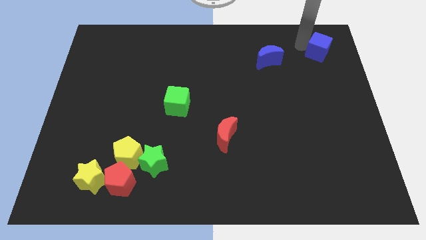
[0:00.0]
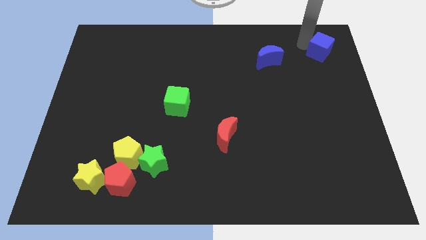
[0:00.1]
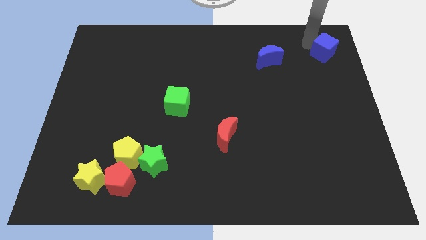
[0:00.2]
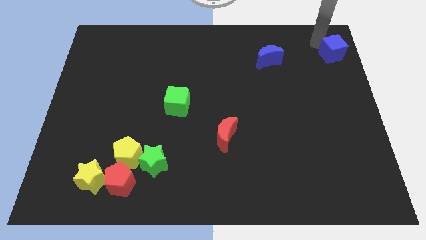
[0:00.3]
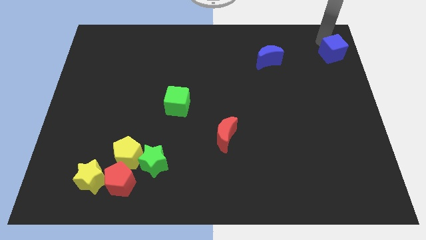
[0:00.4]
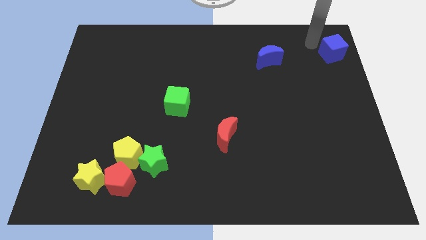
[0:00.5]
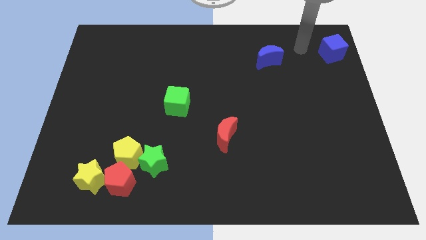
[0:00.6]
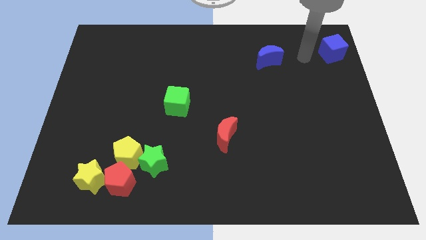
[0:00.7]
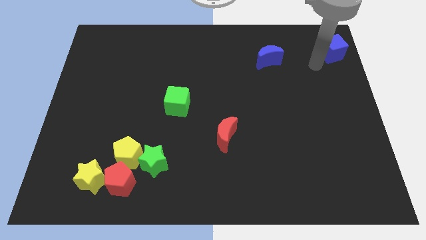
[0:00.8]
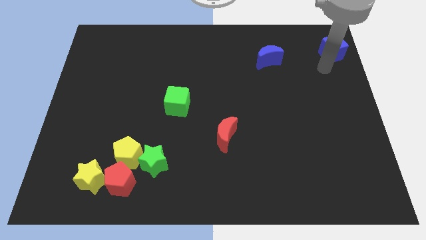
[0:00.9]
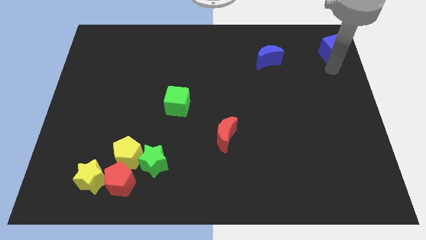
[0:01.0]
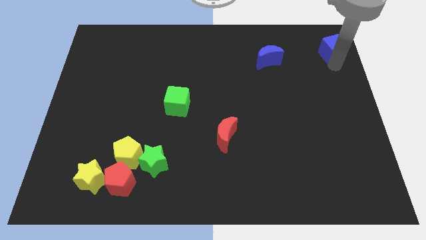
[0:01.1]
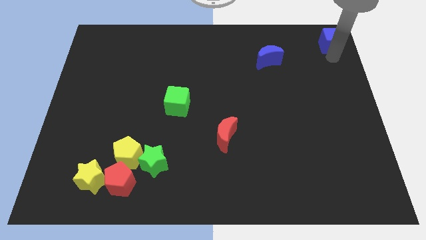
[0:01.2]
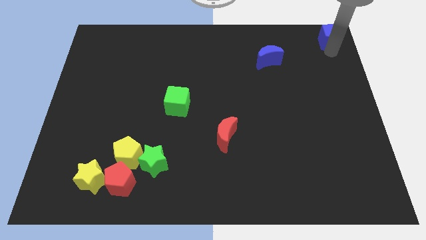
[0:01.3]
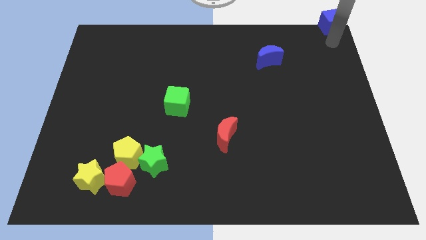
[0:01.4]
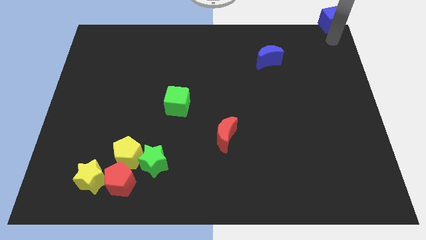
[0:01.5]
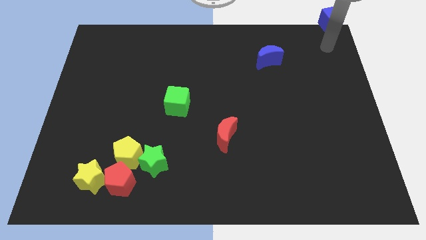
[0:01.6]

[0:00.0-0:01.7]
push the blue cube to the top right corner of the board

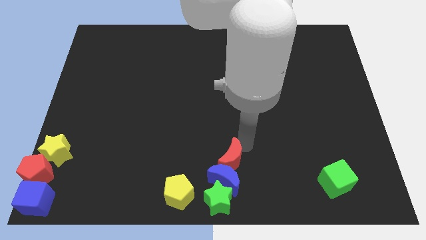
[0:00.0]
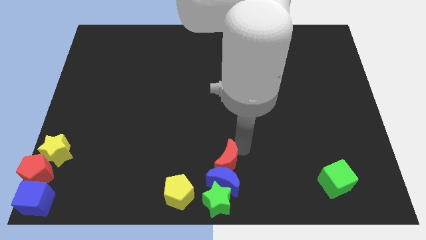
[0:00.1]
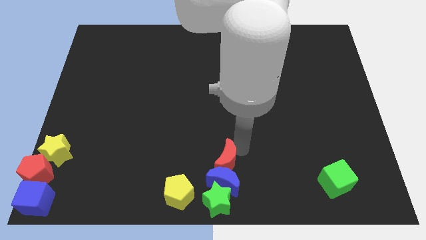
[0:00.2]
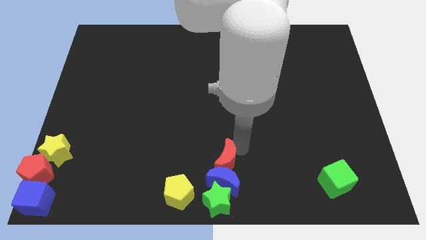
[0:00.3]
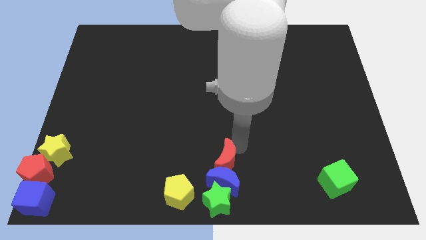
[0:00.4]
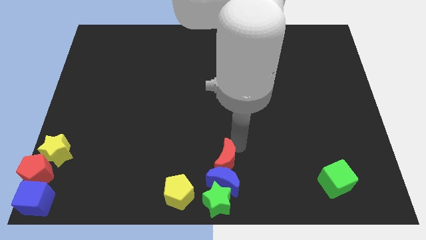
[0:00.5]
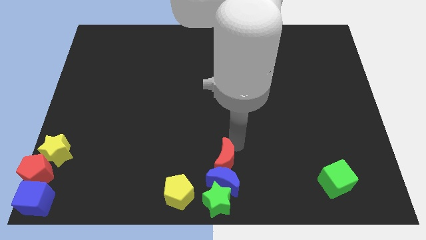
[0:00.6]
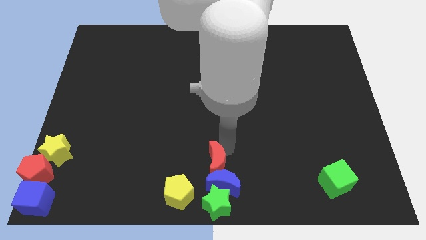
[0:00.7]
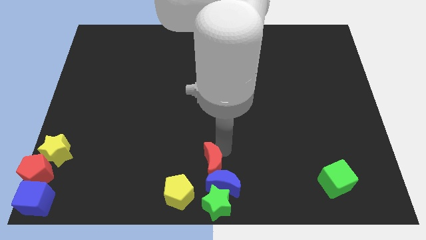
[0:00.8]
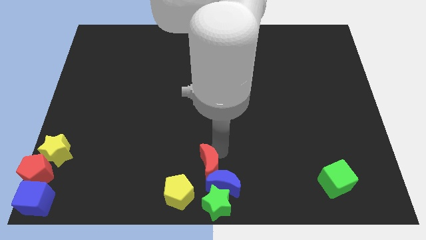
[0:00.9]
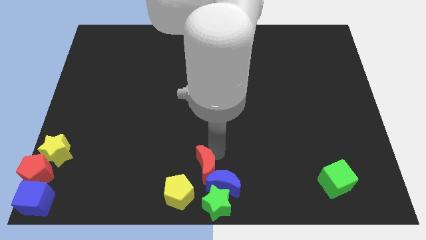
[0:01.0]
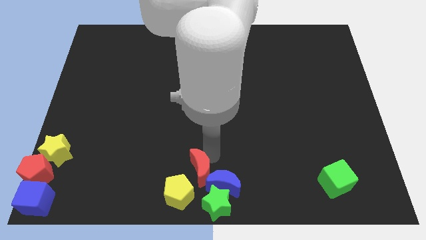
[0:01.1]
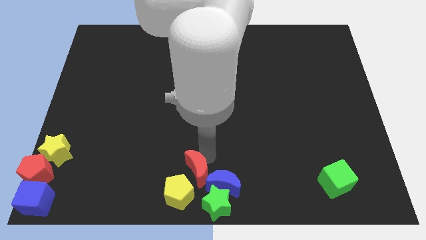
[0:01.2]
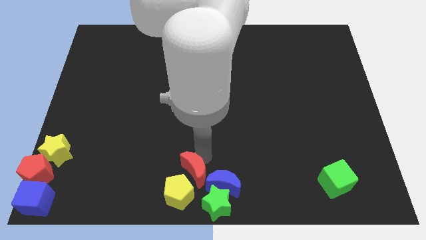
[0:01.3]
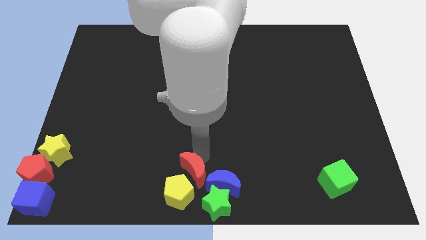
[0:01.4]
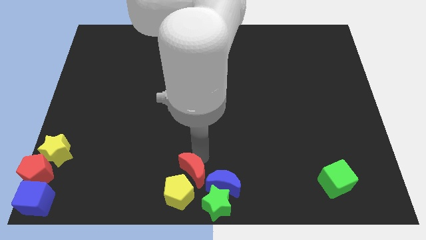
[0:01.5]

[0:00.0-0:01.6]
move the red crescent and blue crescent above the green star and yellow pentagon

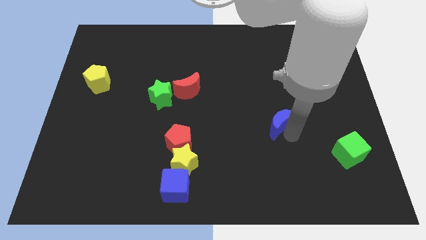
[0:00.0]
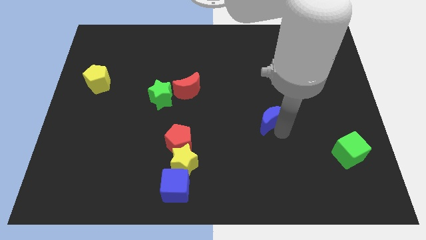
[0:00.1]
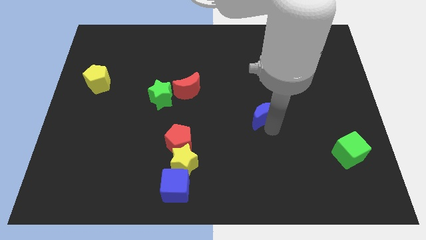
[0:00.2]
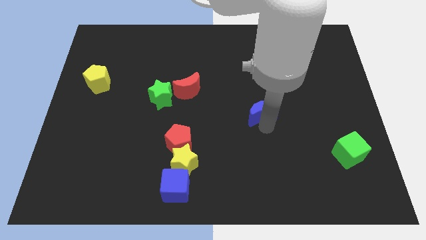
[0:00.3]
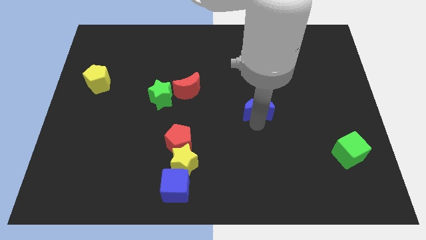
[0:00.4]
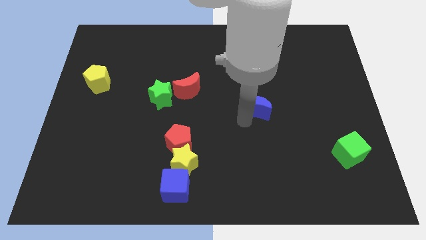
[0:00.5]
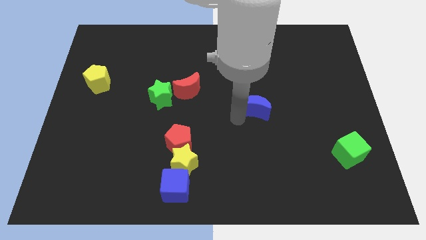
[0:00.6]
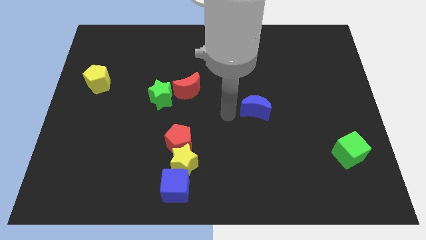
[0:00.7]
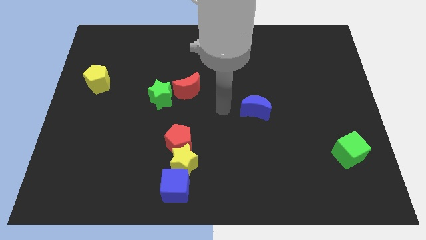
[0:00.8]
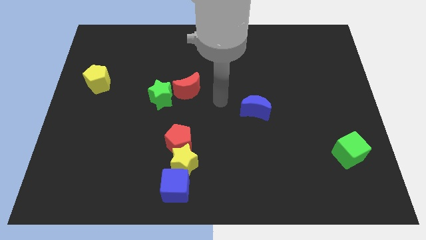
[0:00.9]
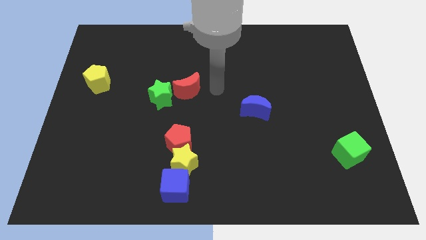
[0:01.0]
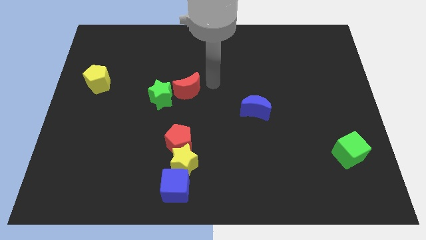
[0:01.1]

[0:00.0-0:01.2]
push the blue crescent towards top side of the board

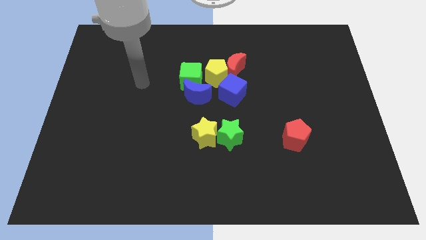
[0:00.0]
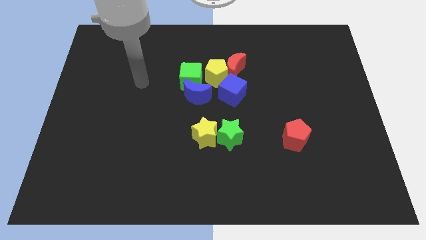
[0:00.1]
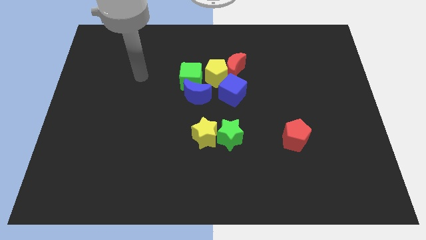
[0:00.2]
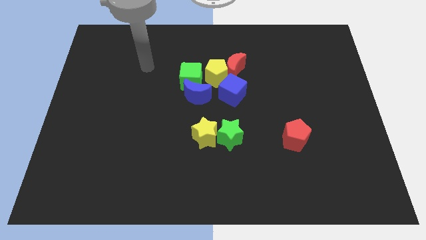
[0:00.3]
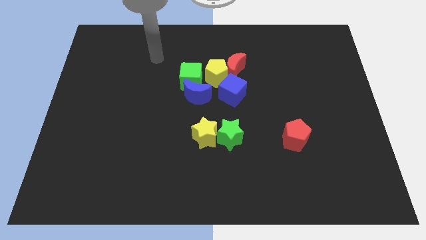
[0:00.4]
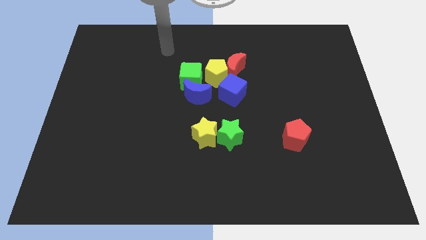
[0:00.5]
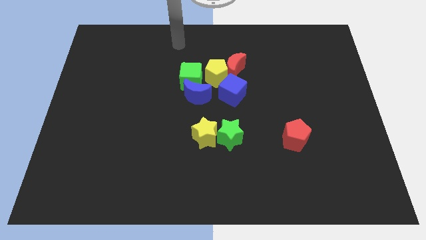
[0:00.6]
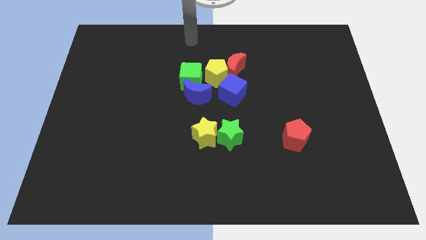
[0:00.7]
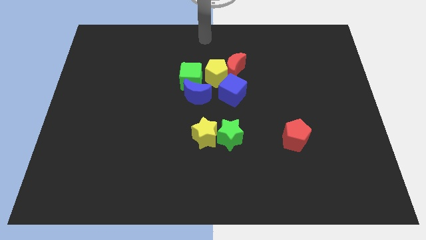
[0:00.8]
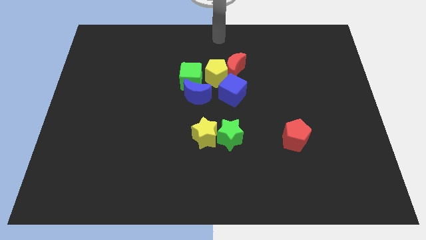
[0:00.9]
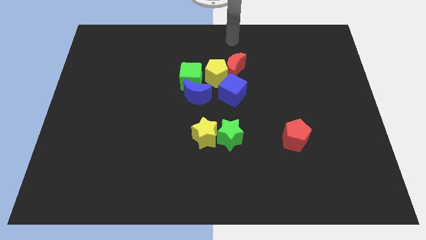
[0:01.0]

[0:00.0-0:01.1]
place your hand to the top of the red crescent

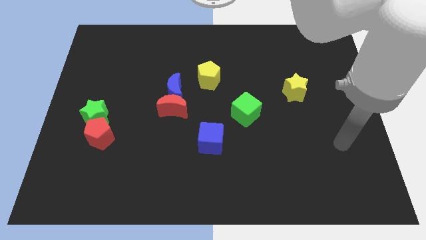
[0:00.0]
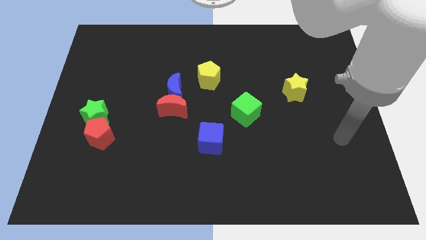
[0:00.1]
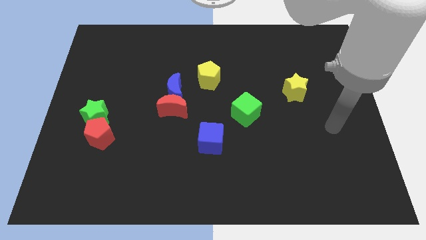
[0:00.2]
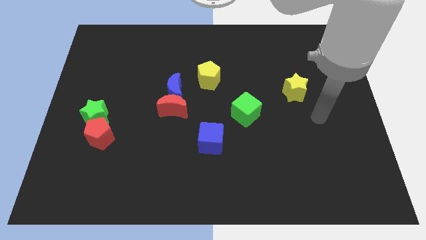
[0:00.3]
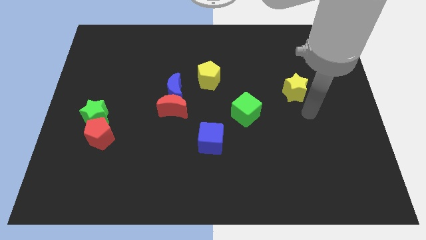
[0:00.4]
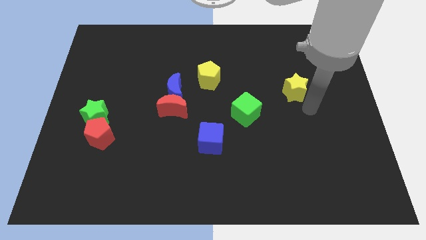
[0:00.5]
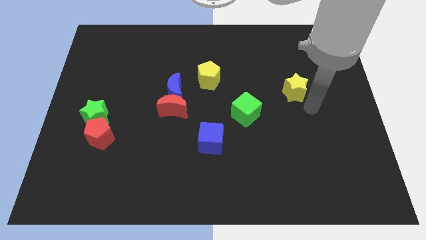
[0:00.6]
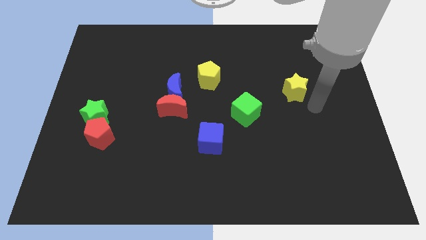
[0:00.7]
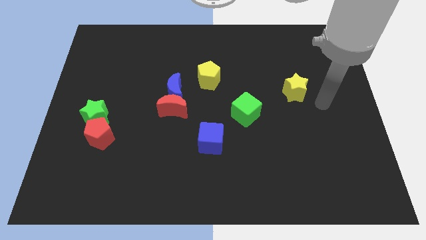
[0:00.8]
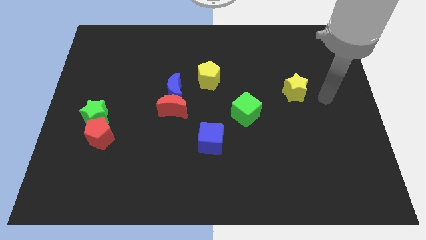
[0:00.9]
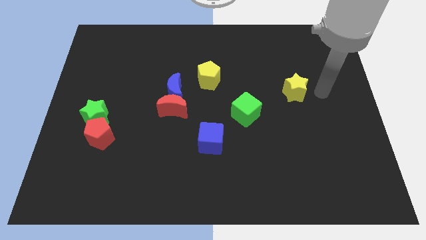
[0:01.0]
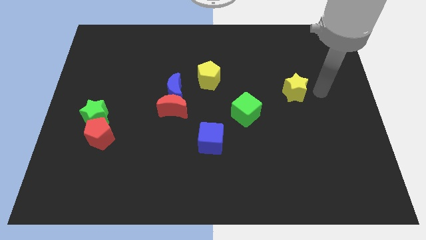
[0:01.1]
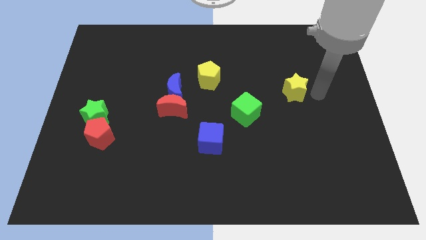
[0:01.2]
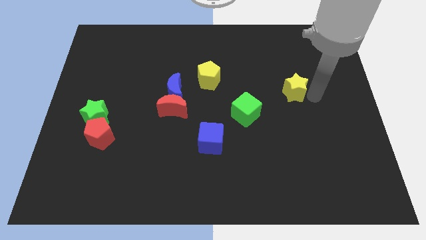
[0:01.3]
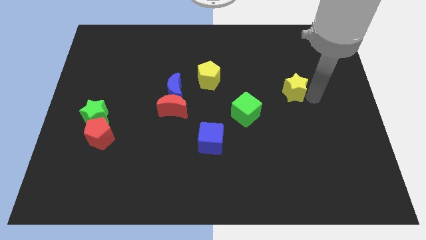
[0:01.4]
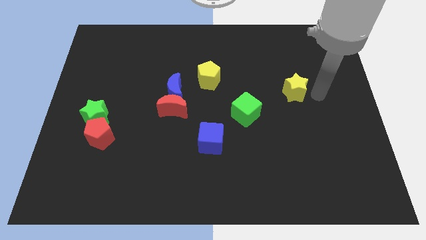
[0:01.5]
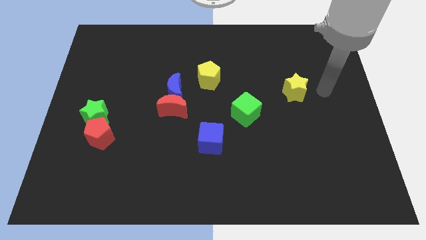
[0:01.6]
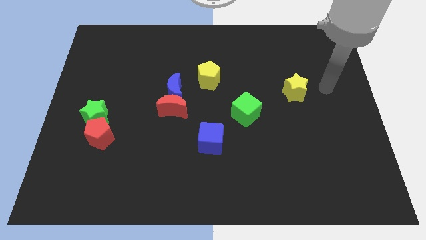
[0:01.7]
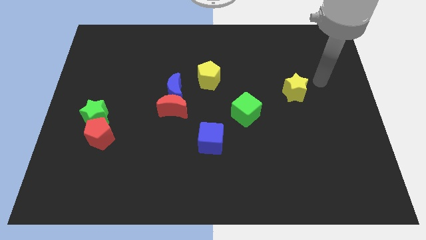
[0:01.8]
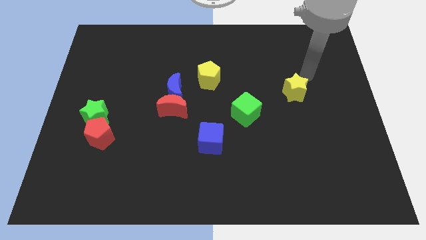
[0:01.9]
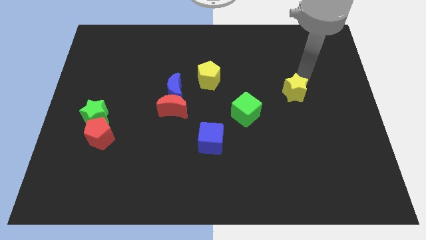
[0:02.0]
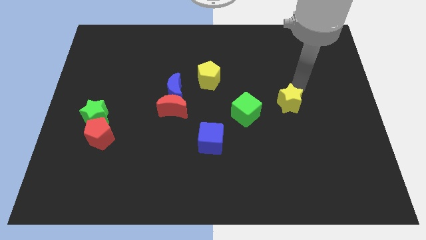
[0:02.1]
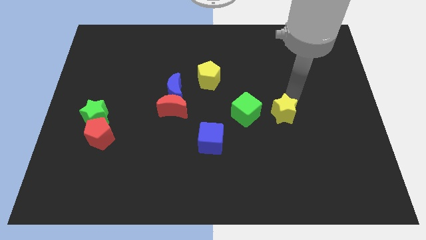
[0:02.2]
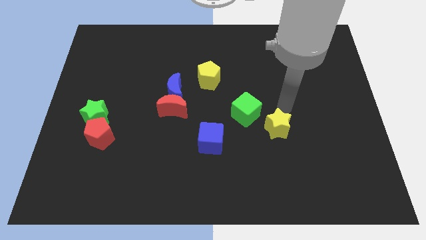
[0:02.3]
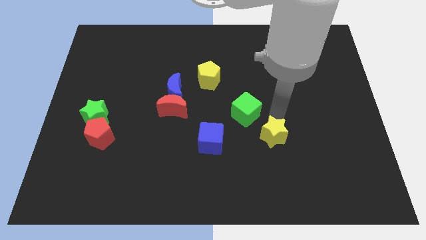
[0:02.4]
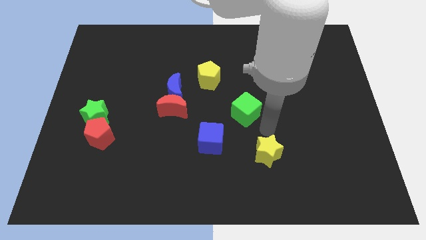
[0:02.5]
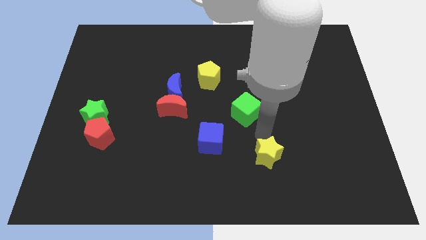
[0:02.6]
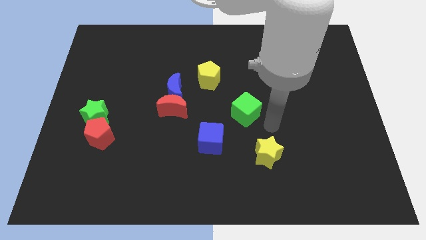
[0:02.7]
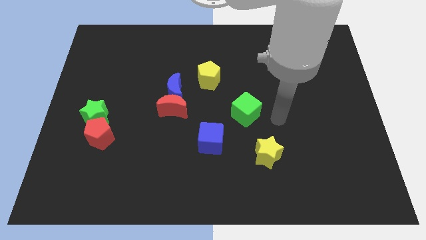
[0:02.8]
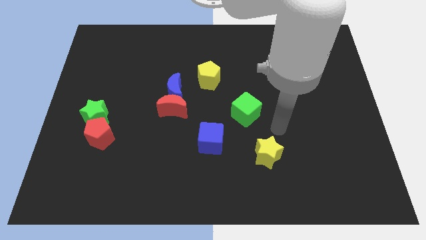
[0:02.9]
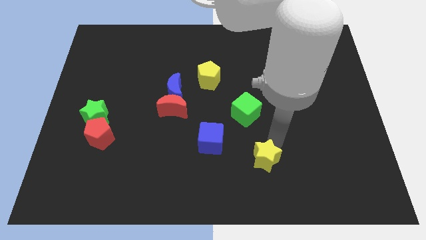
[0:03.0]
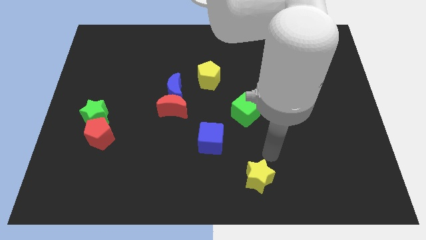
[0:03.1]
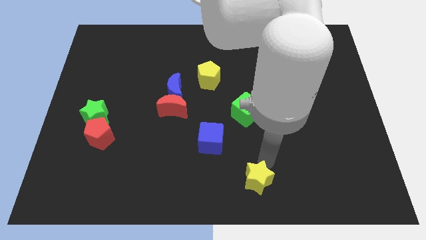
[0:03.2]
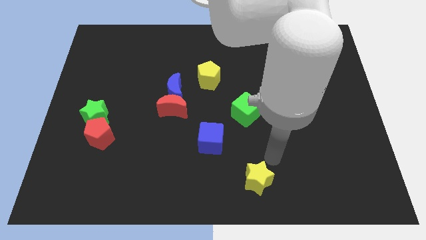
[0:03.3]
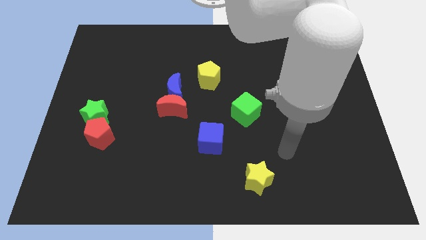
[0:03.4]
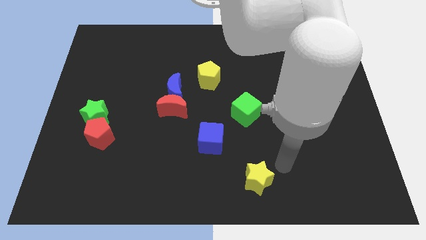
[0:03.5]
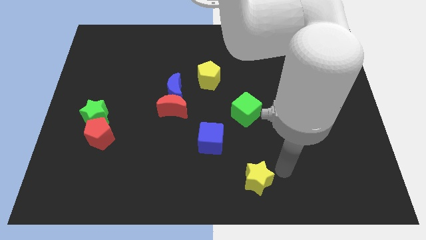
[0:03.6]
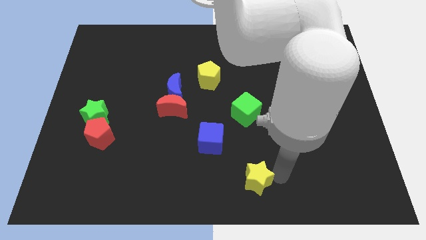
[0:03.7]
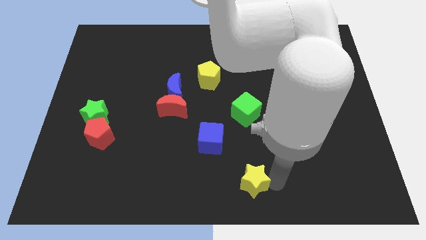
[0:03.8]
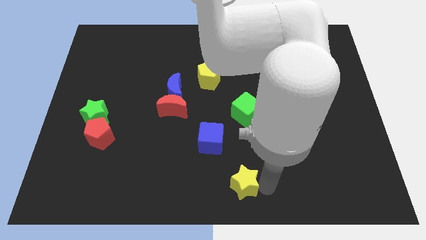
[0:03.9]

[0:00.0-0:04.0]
move the yellow star vertically to the bottom side of the green cube
